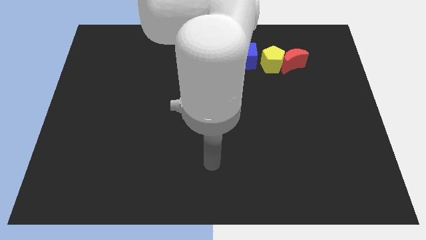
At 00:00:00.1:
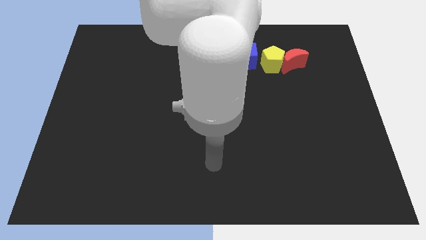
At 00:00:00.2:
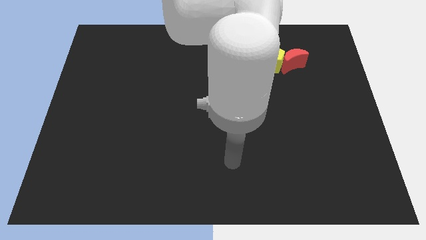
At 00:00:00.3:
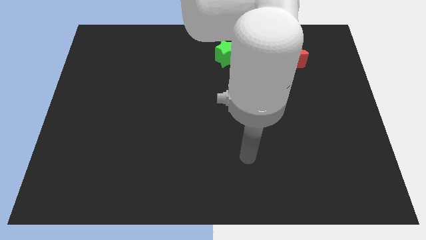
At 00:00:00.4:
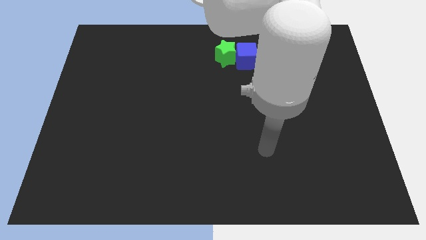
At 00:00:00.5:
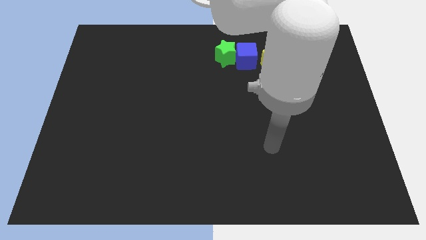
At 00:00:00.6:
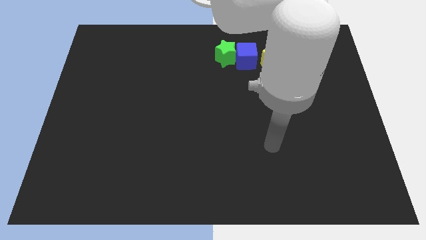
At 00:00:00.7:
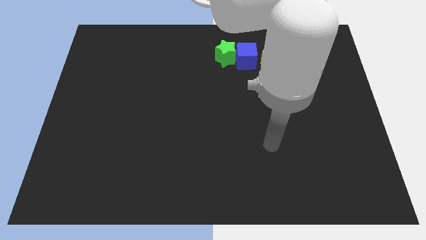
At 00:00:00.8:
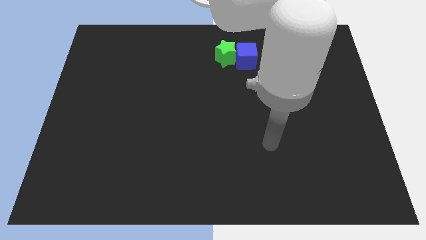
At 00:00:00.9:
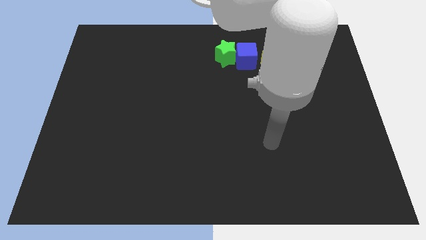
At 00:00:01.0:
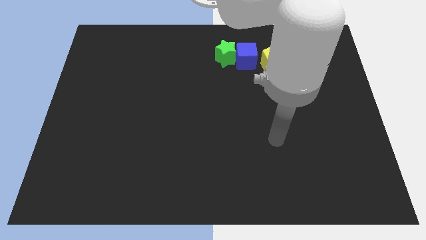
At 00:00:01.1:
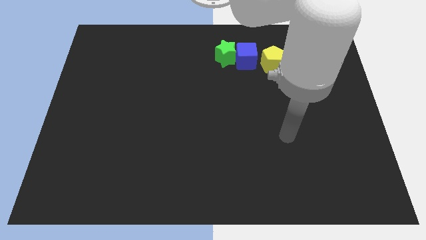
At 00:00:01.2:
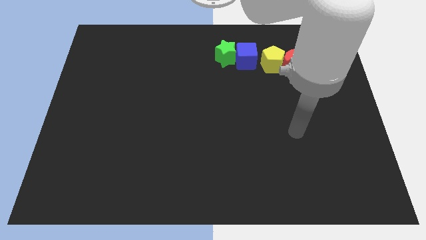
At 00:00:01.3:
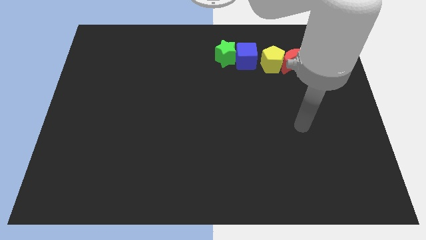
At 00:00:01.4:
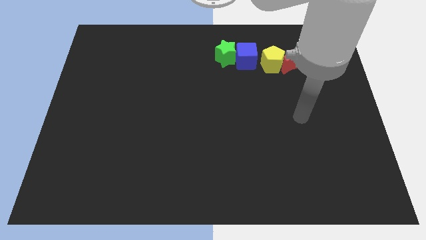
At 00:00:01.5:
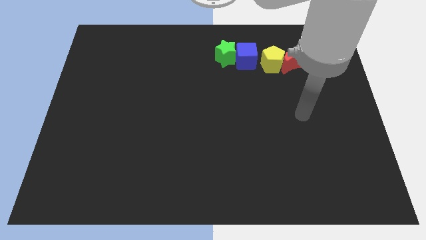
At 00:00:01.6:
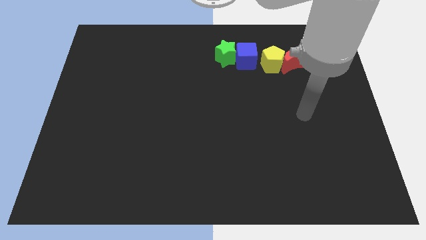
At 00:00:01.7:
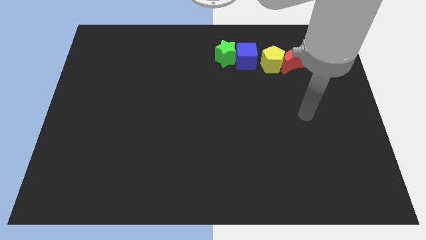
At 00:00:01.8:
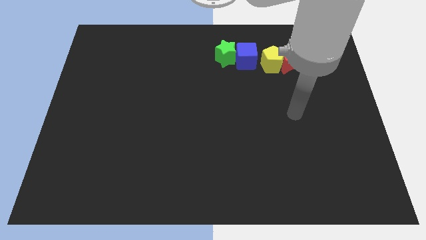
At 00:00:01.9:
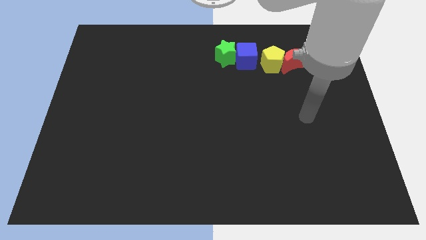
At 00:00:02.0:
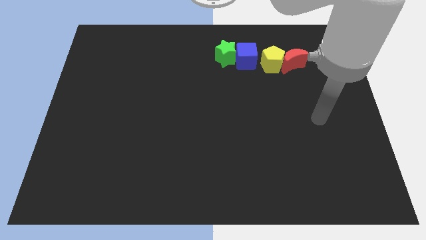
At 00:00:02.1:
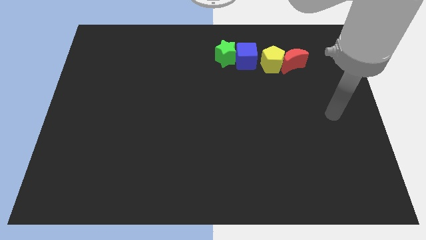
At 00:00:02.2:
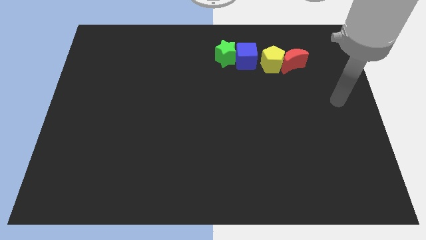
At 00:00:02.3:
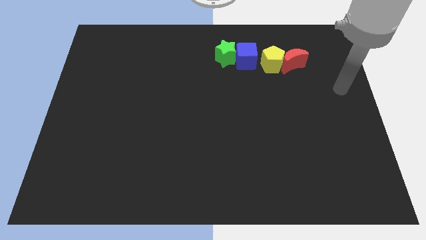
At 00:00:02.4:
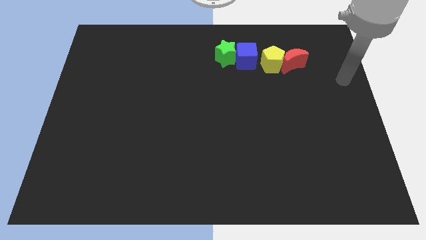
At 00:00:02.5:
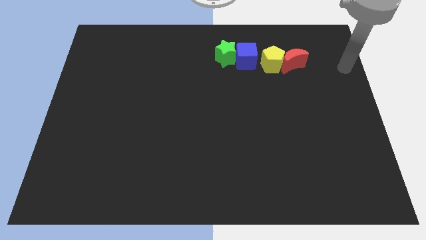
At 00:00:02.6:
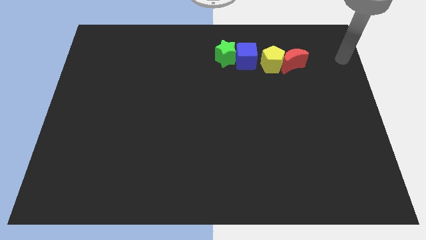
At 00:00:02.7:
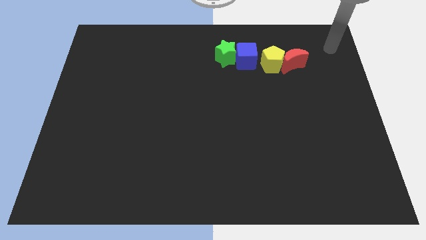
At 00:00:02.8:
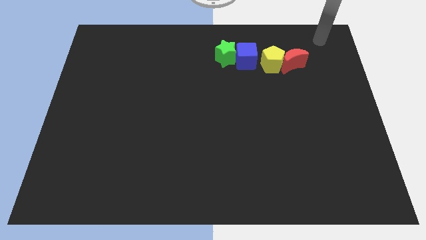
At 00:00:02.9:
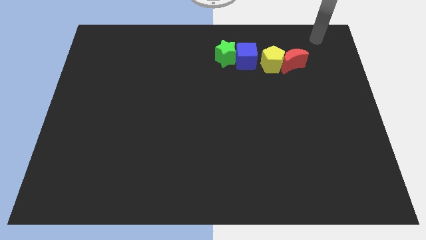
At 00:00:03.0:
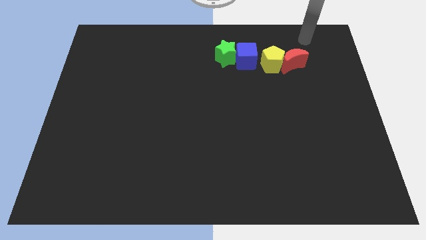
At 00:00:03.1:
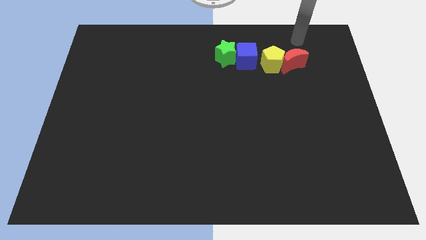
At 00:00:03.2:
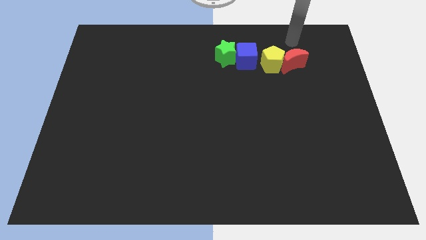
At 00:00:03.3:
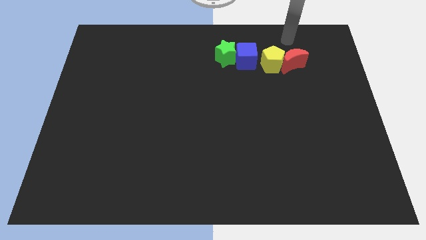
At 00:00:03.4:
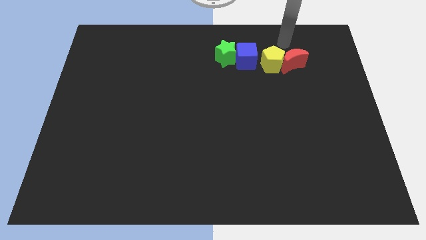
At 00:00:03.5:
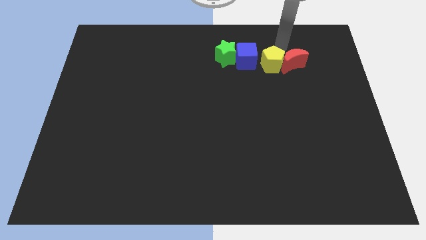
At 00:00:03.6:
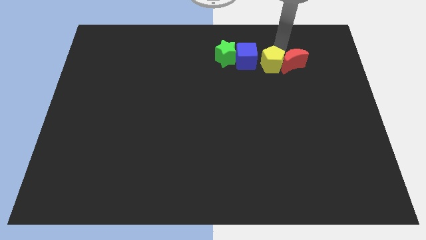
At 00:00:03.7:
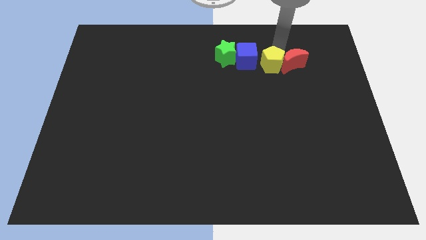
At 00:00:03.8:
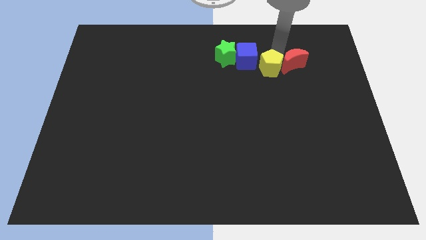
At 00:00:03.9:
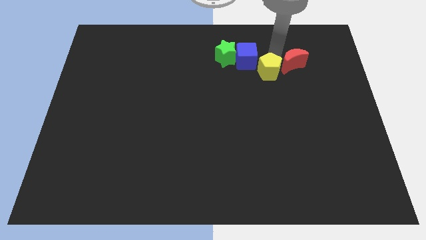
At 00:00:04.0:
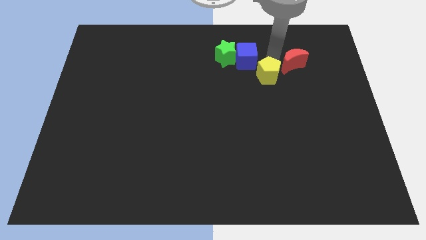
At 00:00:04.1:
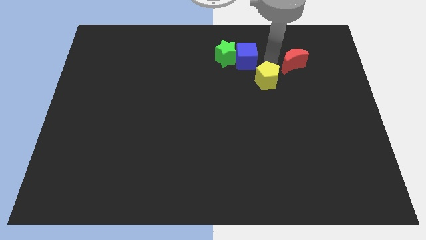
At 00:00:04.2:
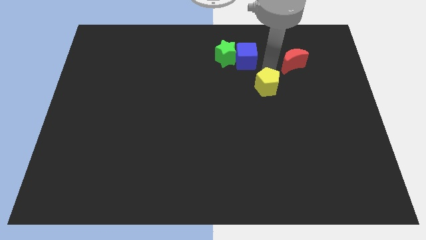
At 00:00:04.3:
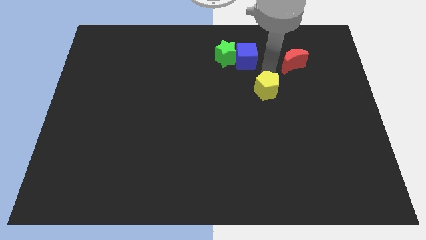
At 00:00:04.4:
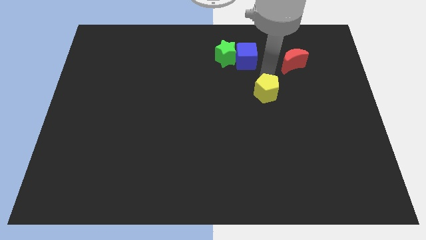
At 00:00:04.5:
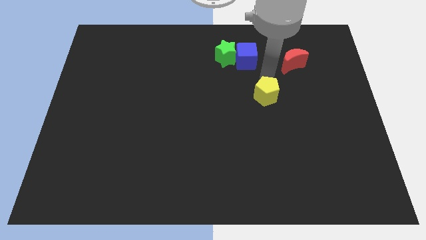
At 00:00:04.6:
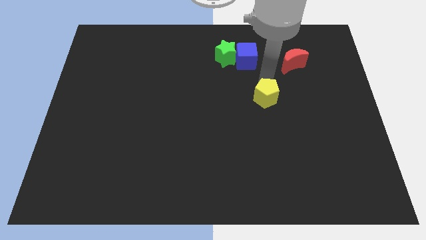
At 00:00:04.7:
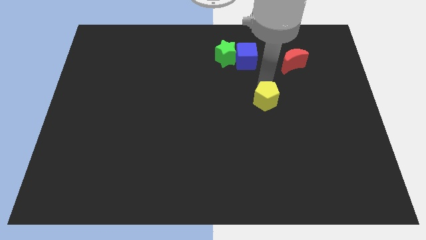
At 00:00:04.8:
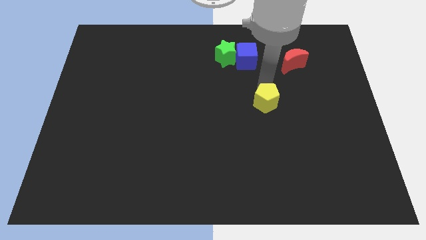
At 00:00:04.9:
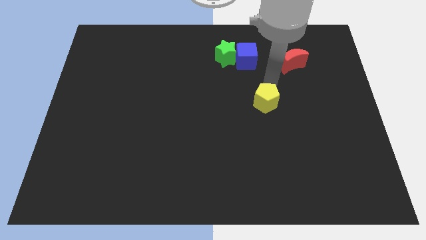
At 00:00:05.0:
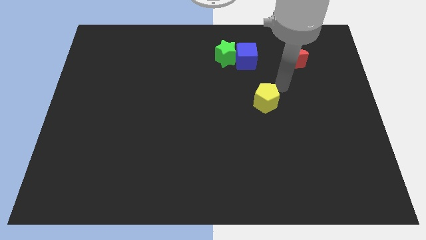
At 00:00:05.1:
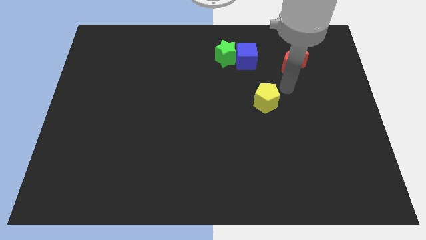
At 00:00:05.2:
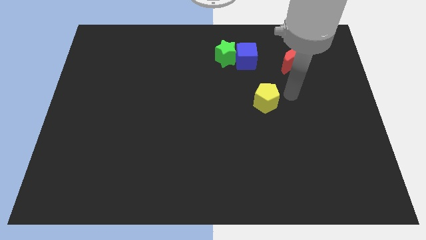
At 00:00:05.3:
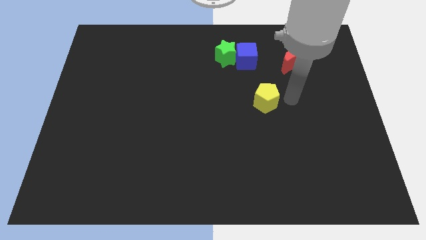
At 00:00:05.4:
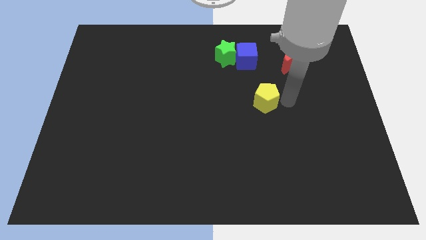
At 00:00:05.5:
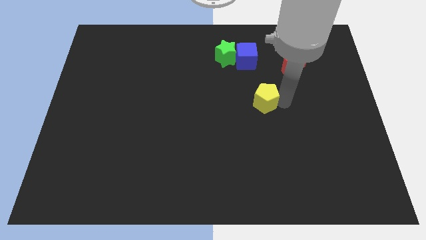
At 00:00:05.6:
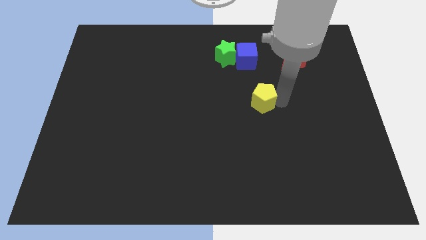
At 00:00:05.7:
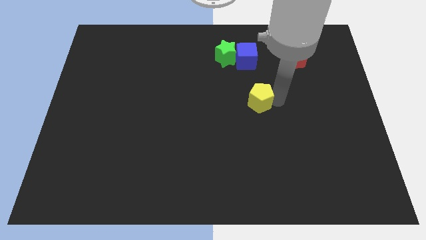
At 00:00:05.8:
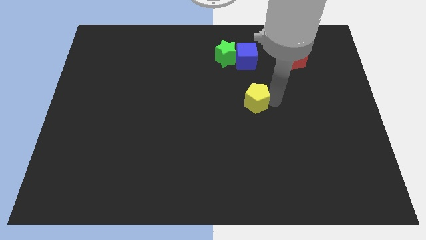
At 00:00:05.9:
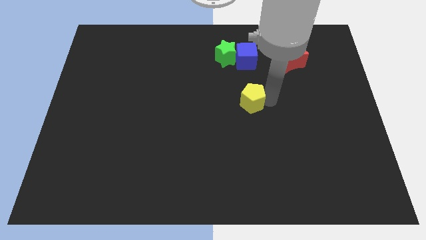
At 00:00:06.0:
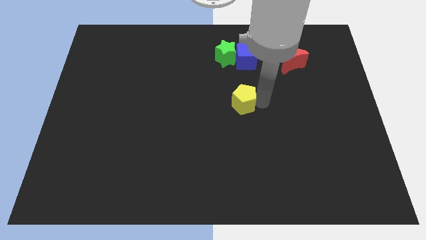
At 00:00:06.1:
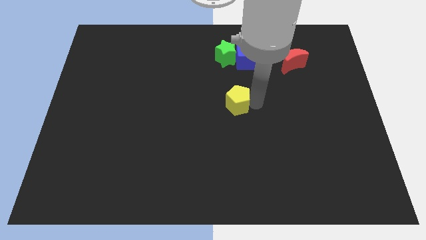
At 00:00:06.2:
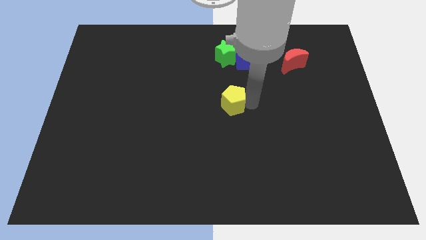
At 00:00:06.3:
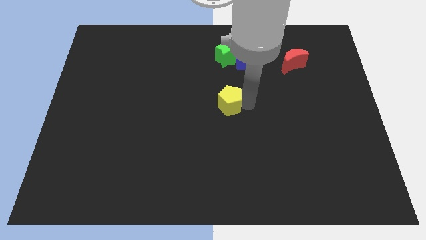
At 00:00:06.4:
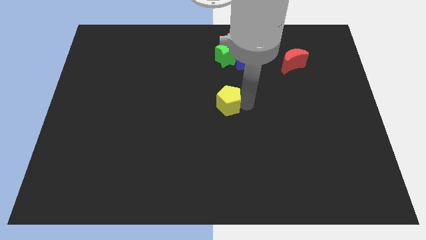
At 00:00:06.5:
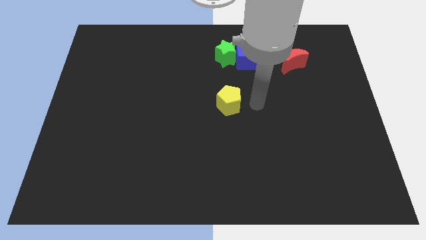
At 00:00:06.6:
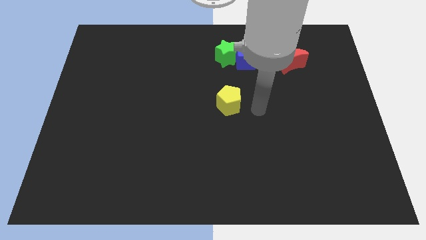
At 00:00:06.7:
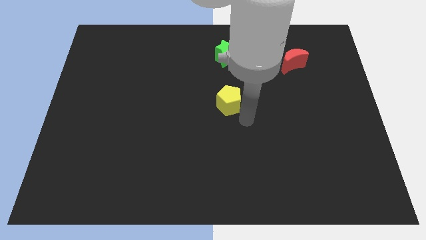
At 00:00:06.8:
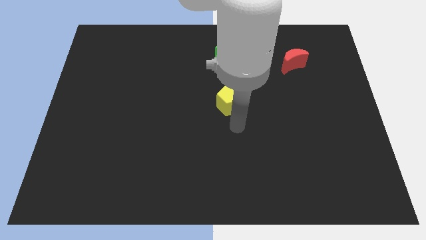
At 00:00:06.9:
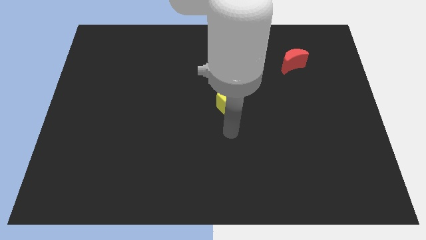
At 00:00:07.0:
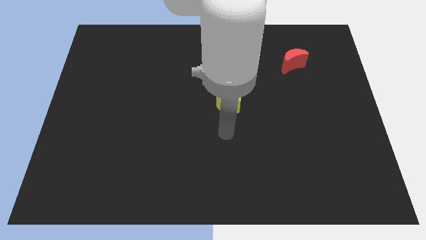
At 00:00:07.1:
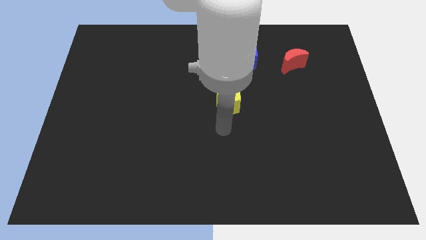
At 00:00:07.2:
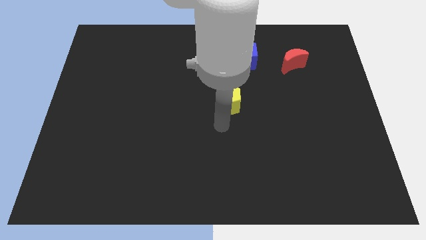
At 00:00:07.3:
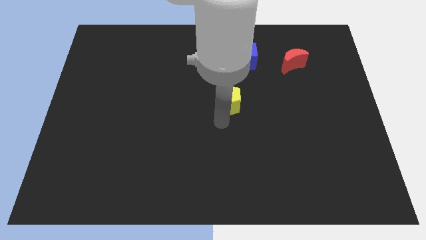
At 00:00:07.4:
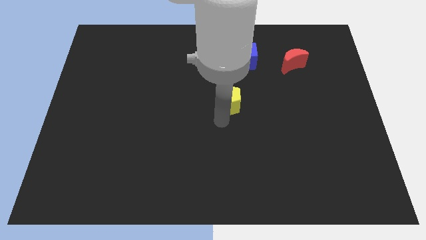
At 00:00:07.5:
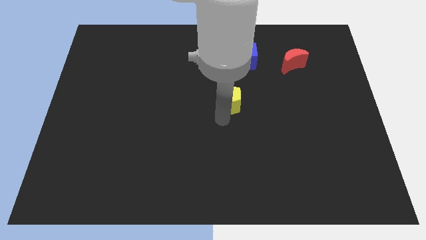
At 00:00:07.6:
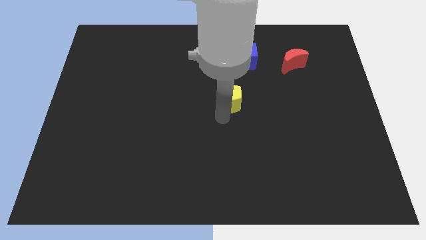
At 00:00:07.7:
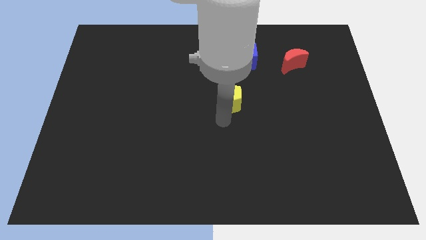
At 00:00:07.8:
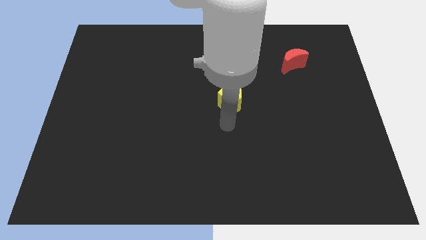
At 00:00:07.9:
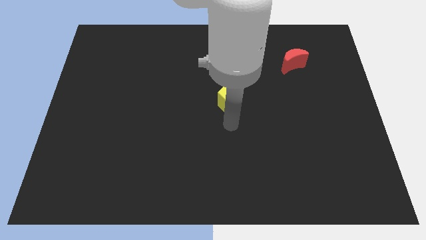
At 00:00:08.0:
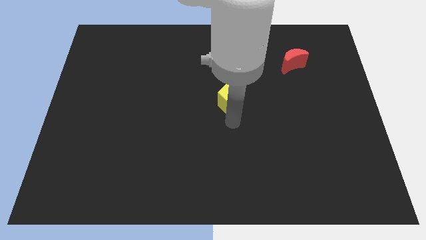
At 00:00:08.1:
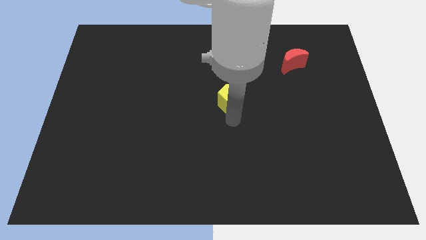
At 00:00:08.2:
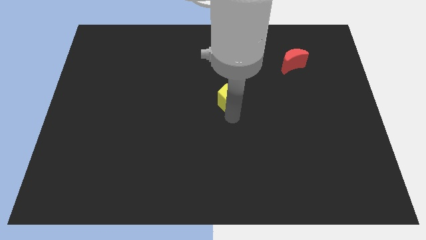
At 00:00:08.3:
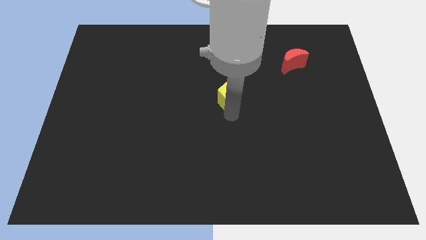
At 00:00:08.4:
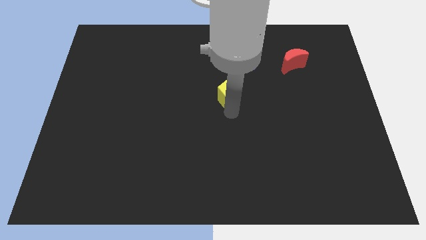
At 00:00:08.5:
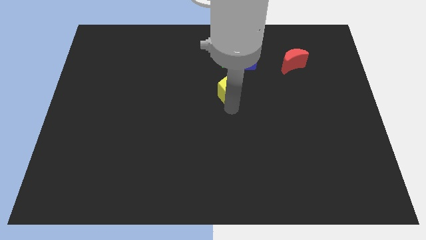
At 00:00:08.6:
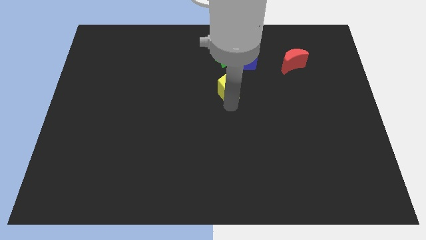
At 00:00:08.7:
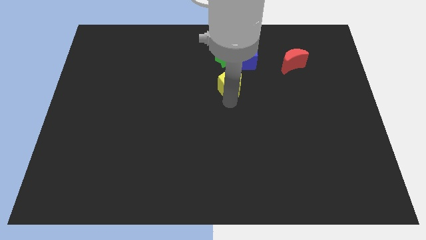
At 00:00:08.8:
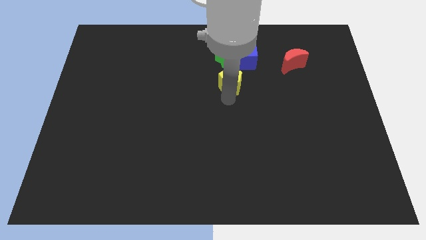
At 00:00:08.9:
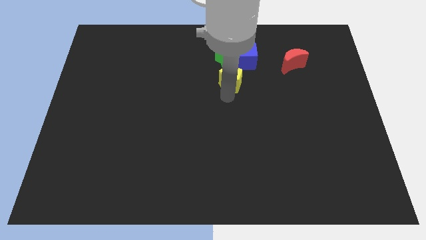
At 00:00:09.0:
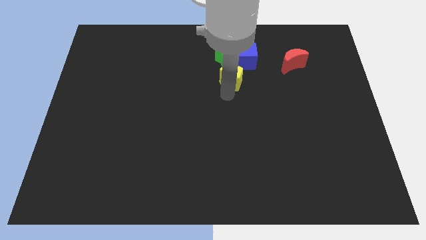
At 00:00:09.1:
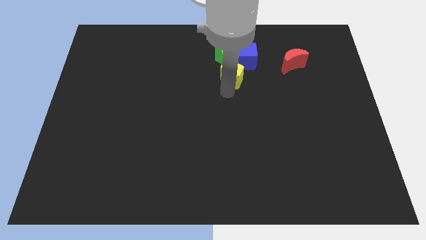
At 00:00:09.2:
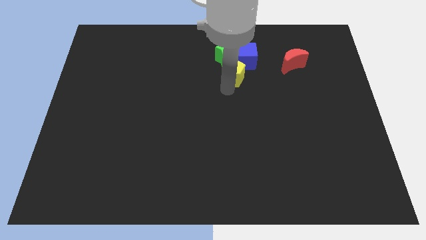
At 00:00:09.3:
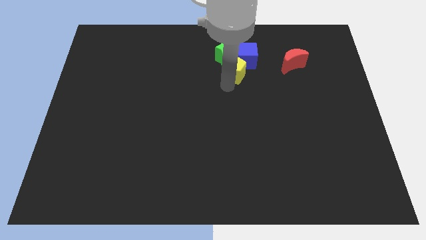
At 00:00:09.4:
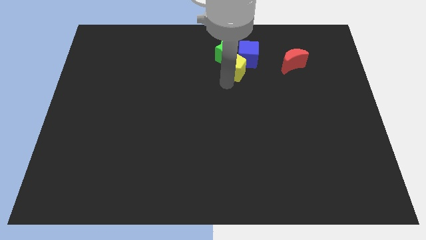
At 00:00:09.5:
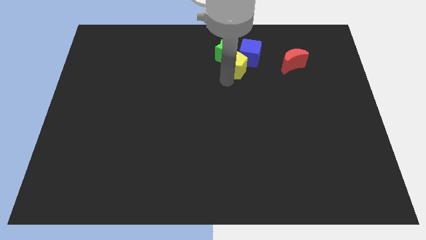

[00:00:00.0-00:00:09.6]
move the yellow block towards the star
